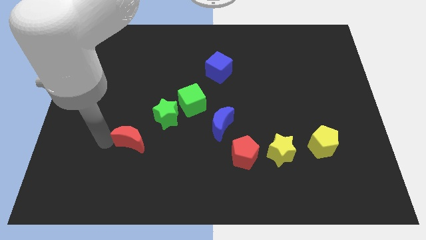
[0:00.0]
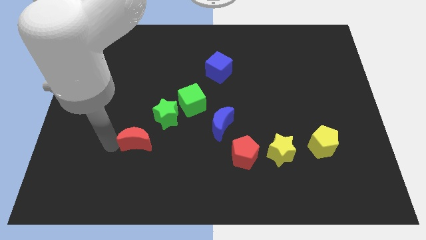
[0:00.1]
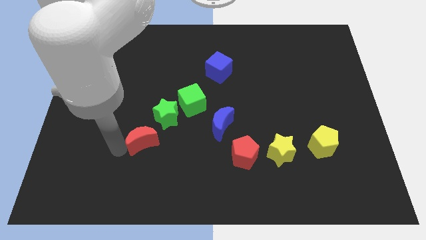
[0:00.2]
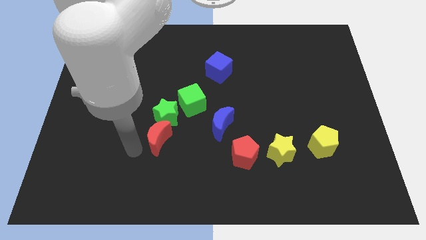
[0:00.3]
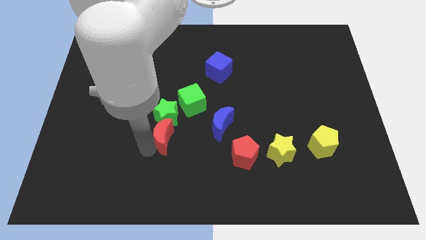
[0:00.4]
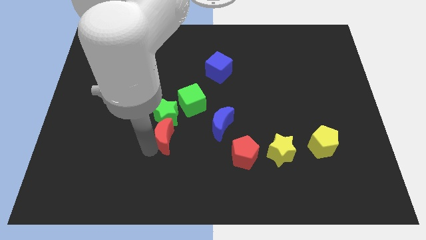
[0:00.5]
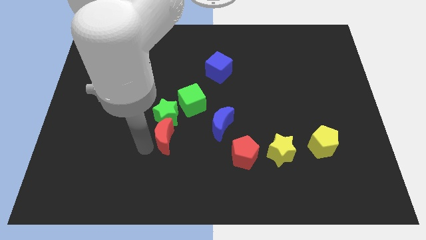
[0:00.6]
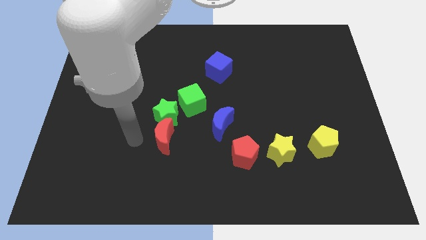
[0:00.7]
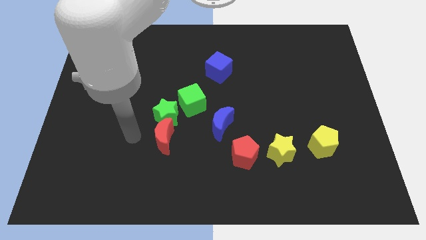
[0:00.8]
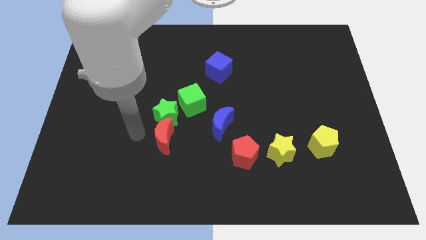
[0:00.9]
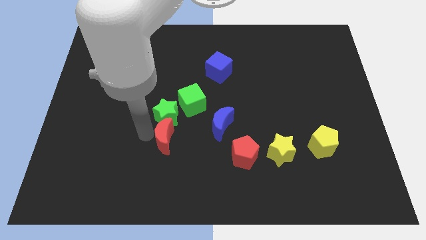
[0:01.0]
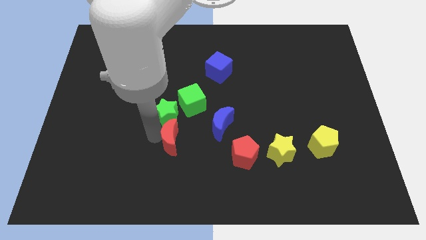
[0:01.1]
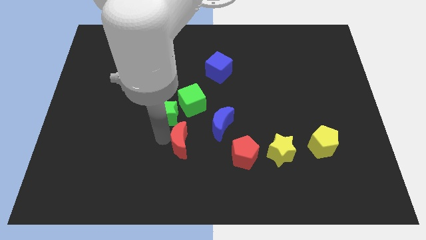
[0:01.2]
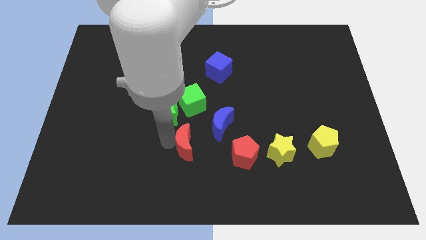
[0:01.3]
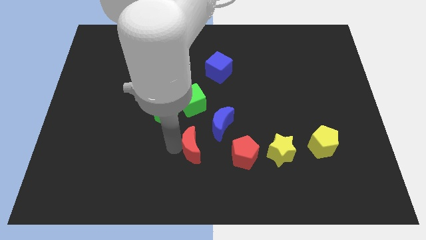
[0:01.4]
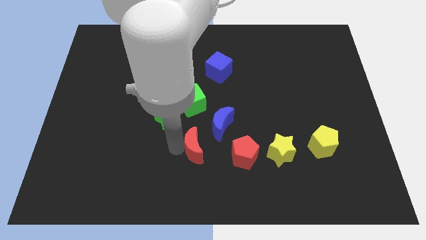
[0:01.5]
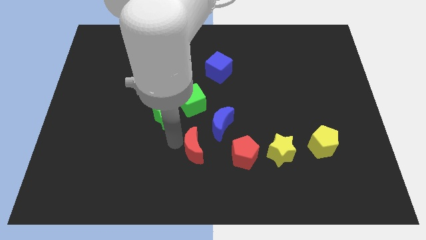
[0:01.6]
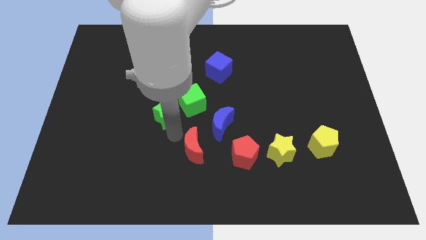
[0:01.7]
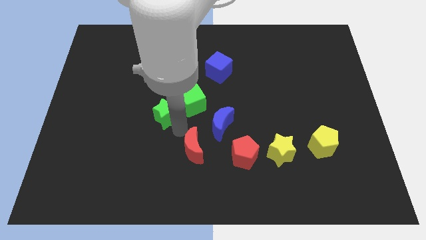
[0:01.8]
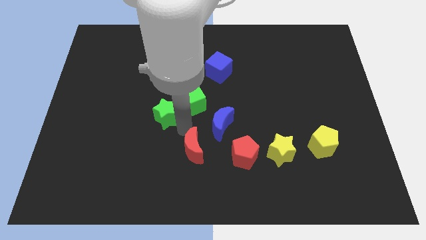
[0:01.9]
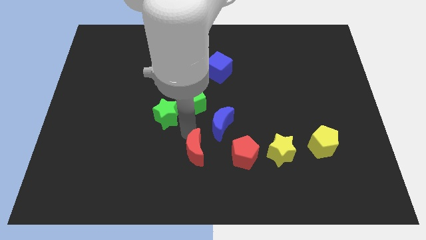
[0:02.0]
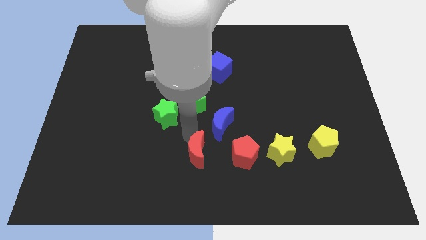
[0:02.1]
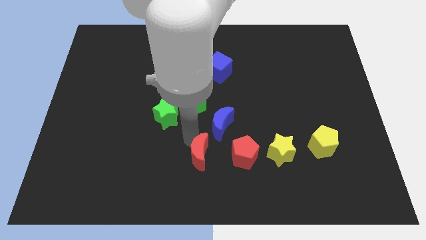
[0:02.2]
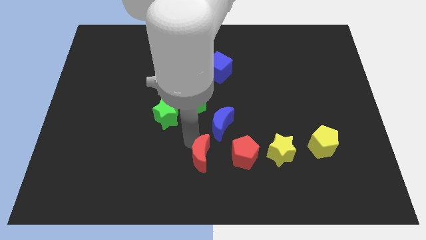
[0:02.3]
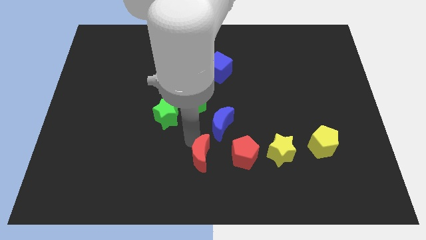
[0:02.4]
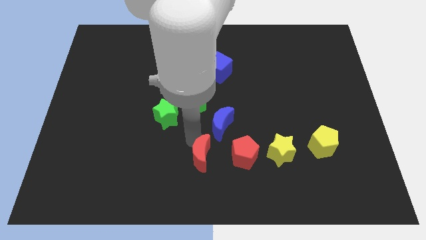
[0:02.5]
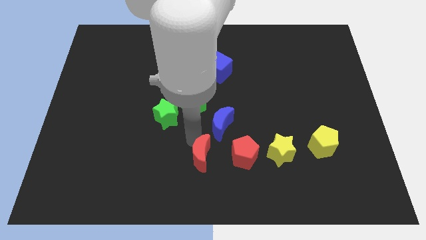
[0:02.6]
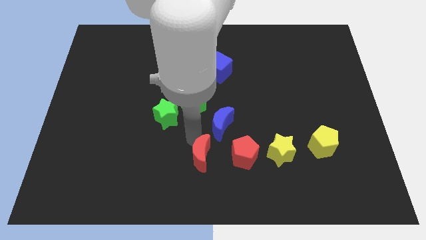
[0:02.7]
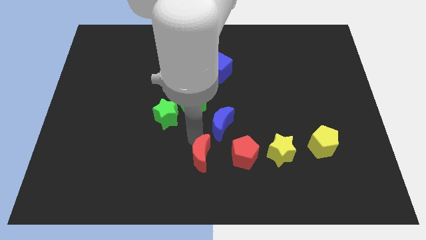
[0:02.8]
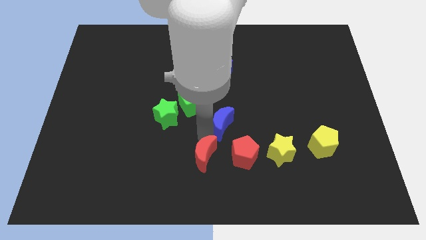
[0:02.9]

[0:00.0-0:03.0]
add the red moon to the left side of the red pentagon

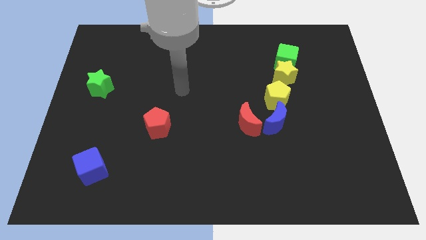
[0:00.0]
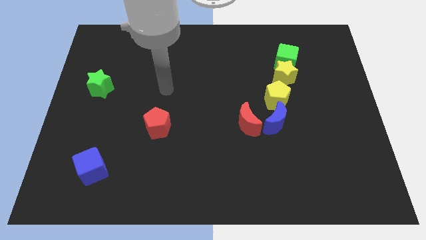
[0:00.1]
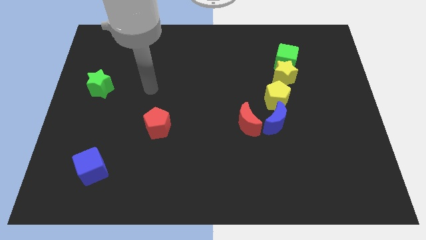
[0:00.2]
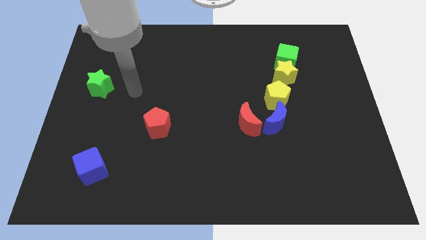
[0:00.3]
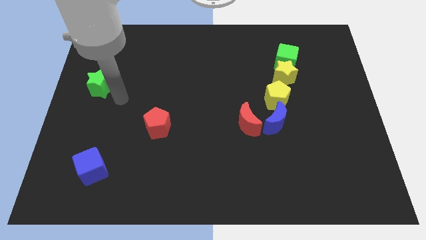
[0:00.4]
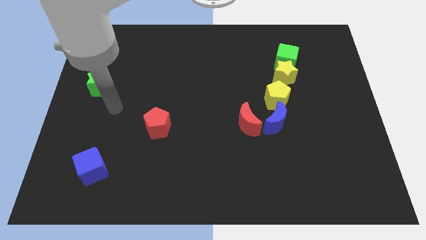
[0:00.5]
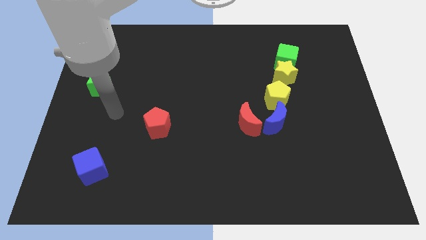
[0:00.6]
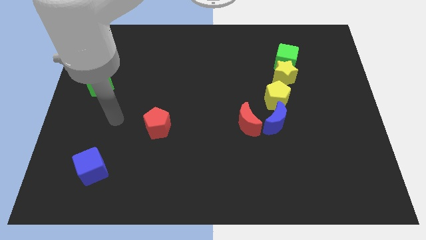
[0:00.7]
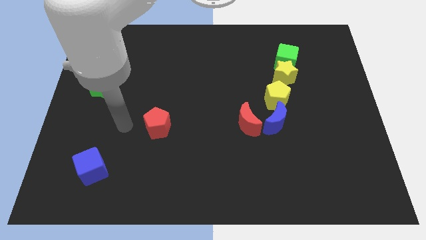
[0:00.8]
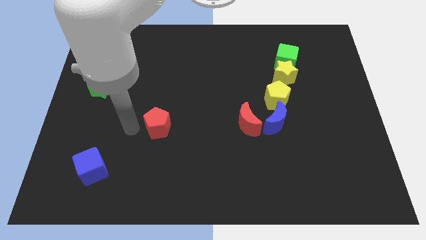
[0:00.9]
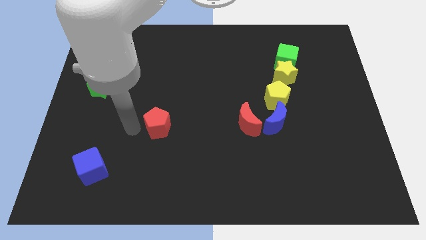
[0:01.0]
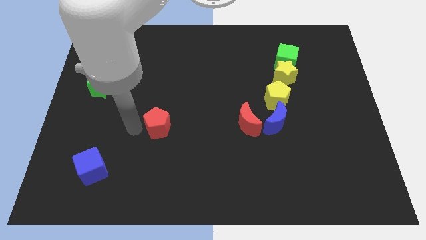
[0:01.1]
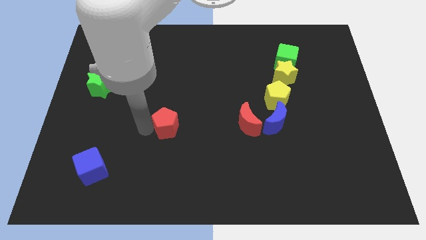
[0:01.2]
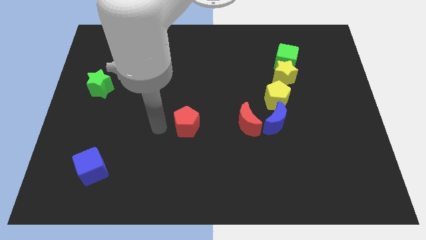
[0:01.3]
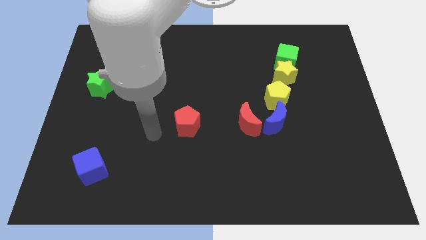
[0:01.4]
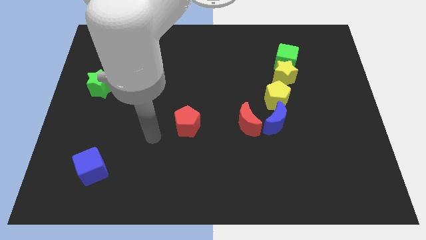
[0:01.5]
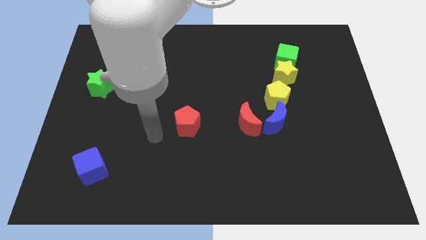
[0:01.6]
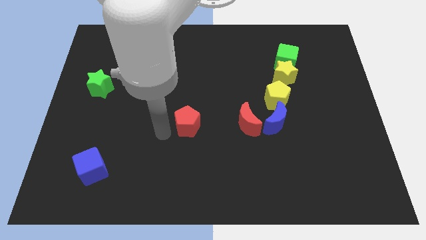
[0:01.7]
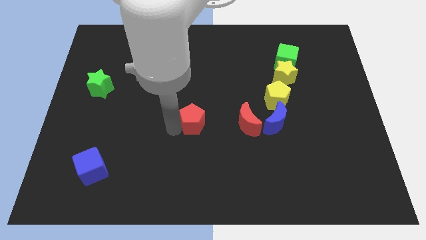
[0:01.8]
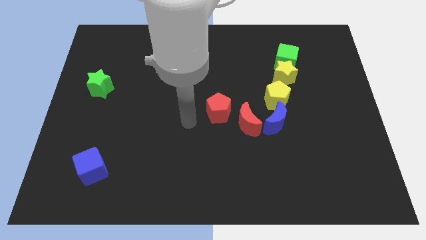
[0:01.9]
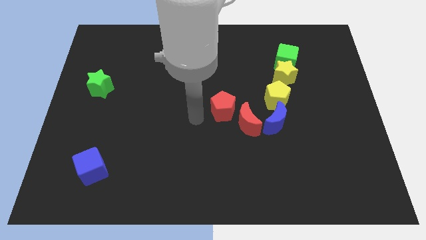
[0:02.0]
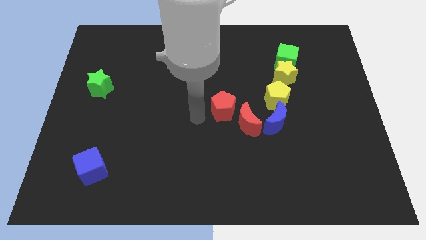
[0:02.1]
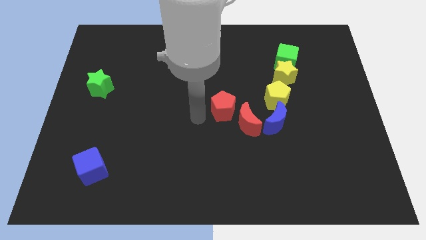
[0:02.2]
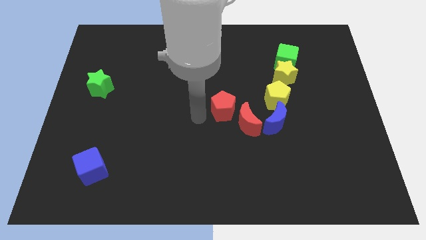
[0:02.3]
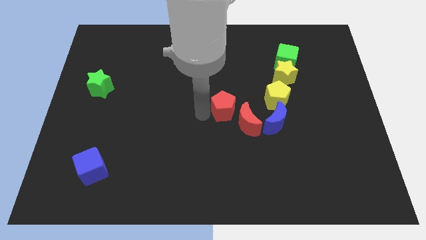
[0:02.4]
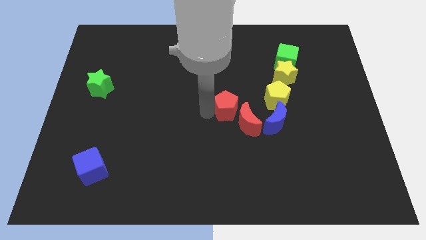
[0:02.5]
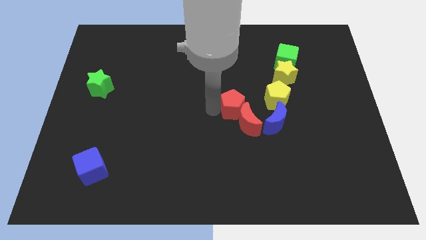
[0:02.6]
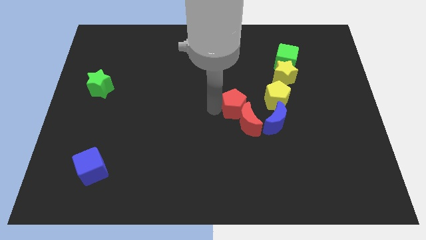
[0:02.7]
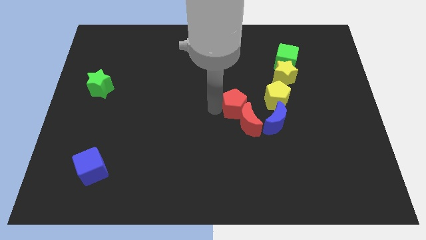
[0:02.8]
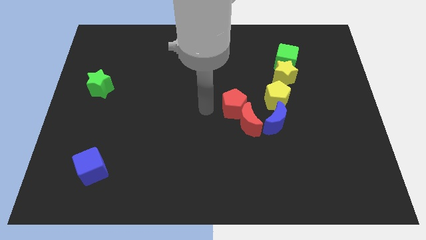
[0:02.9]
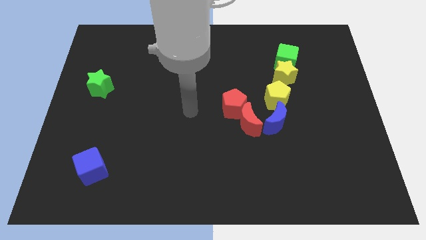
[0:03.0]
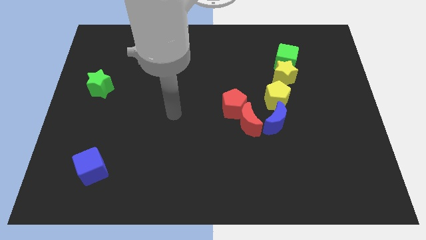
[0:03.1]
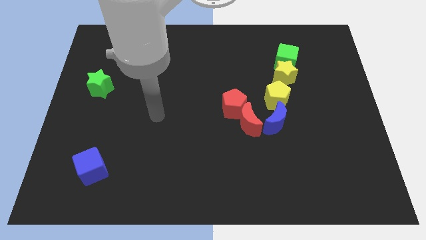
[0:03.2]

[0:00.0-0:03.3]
make the red pentagon to touch the left side of the red crescent

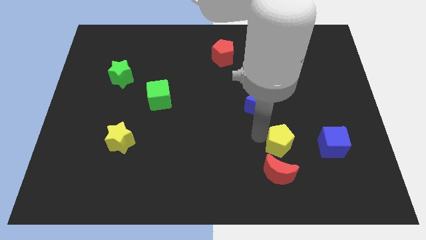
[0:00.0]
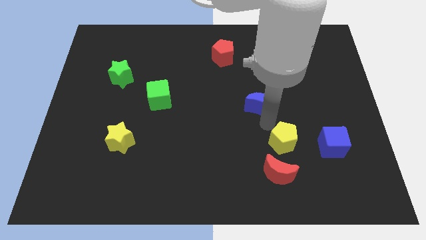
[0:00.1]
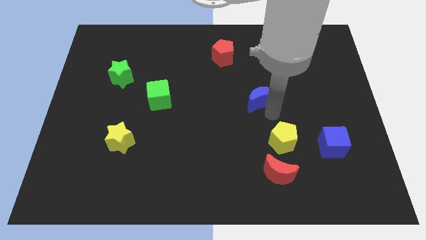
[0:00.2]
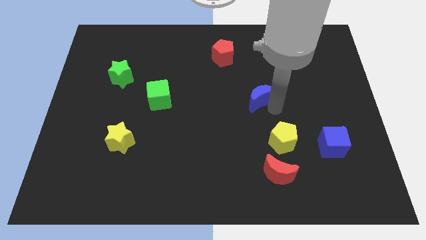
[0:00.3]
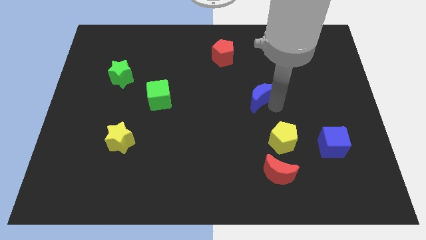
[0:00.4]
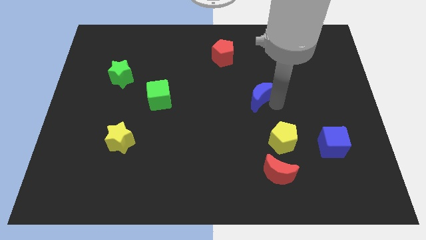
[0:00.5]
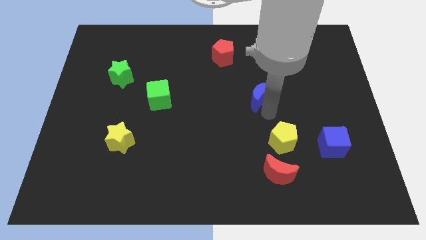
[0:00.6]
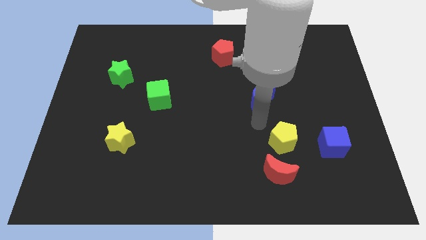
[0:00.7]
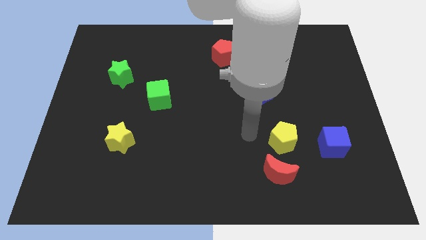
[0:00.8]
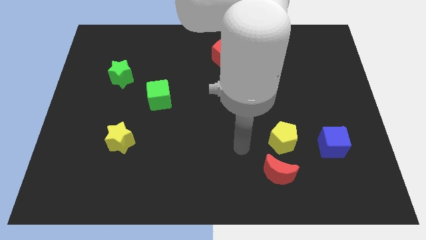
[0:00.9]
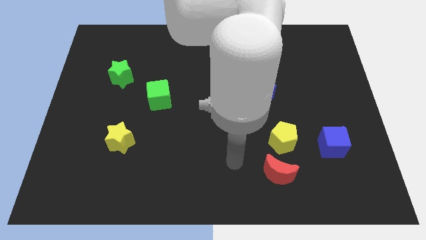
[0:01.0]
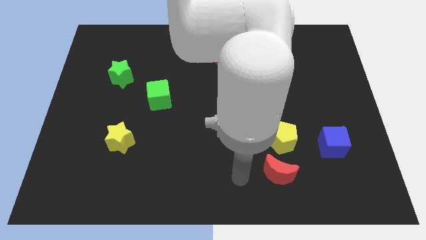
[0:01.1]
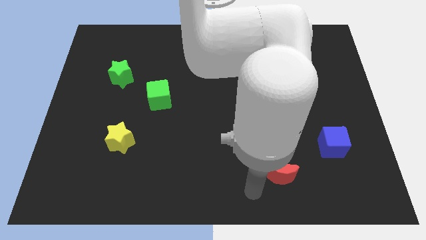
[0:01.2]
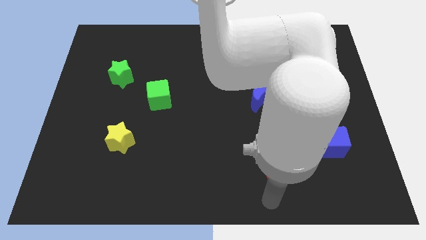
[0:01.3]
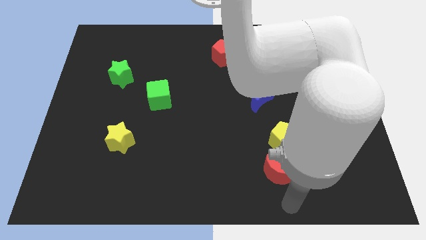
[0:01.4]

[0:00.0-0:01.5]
place your arm below red crescent

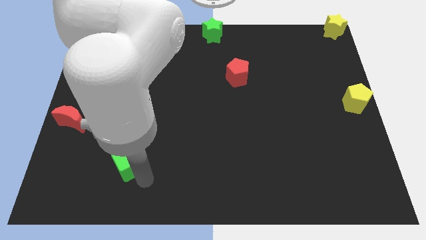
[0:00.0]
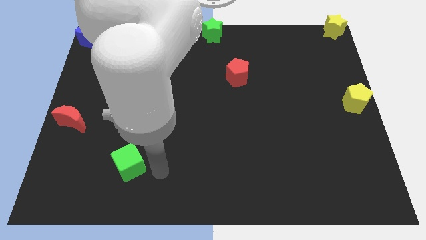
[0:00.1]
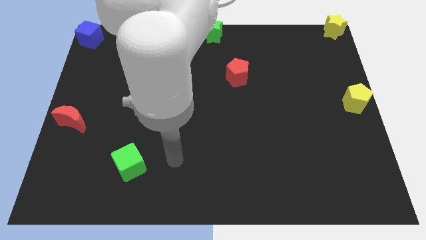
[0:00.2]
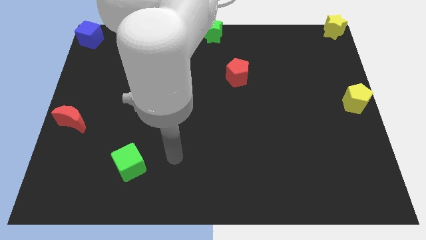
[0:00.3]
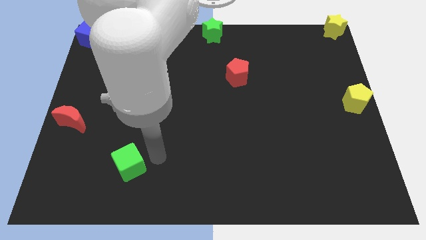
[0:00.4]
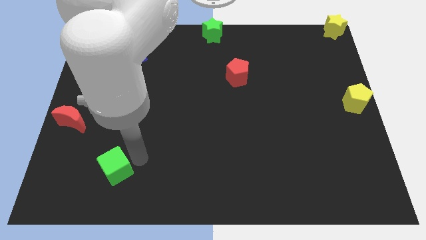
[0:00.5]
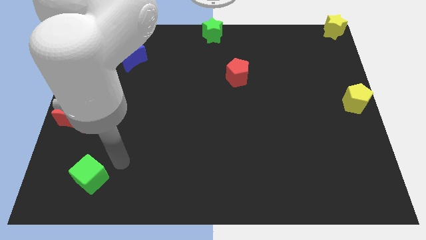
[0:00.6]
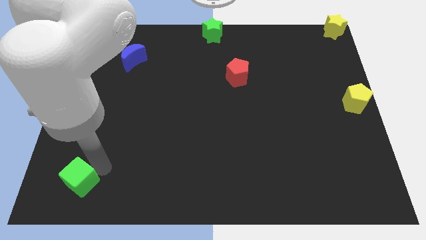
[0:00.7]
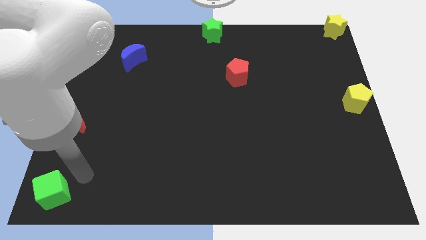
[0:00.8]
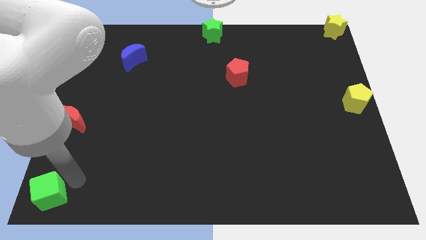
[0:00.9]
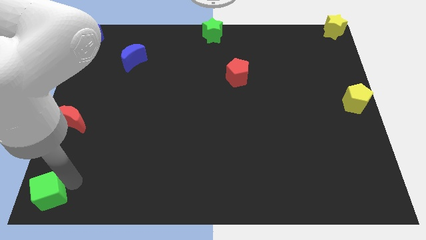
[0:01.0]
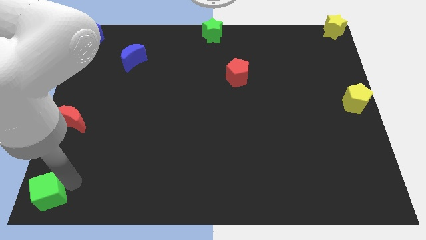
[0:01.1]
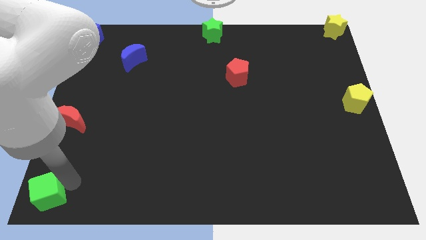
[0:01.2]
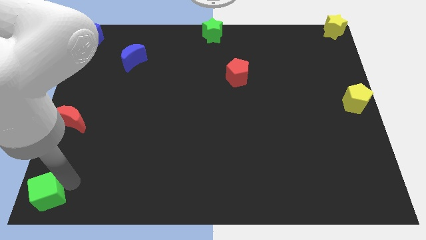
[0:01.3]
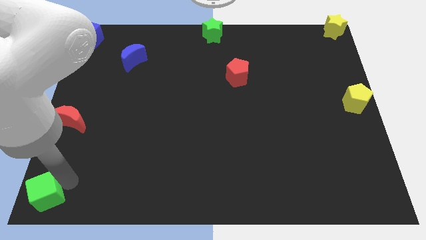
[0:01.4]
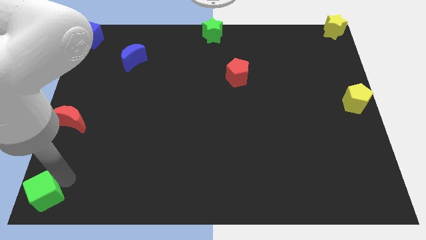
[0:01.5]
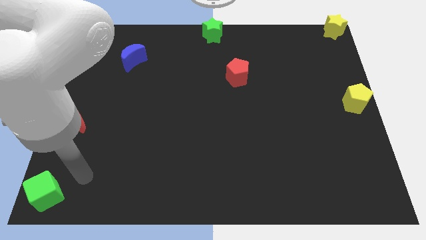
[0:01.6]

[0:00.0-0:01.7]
push the green cube to the bottom left corner
